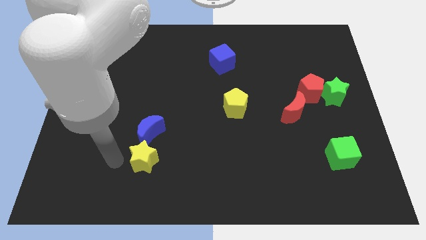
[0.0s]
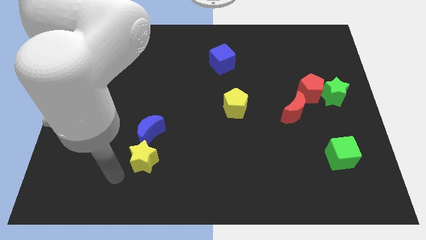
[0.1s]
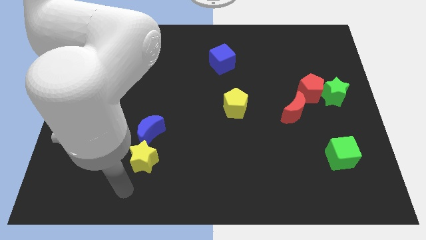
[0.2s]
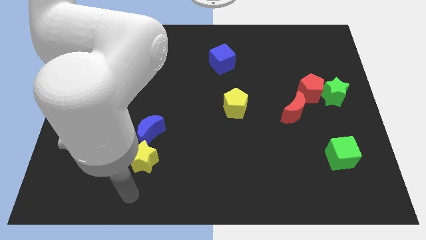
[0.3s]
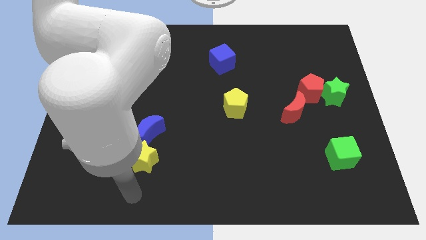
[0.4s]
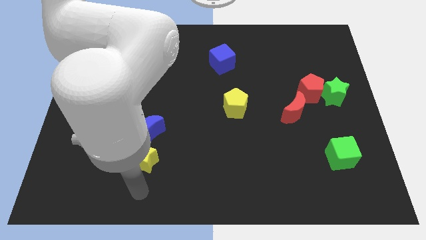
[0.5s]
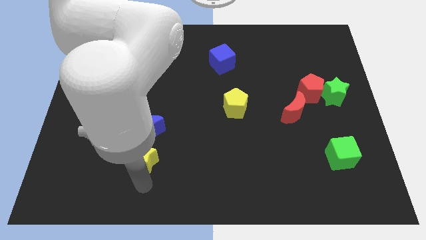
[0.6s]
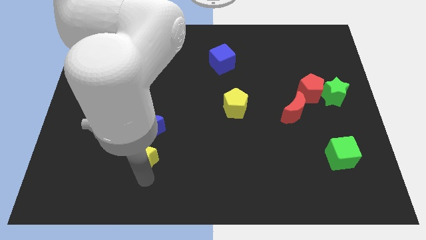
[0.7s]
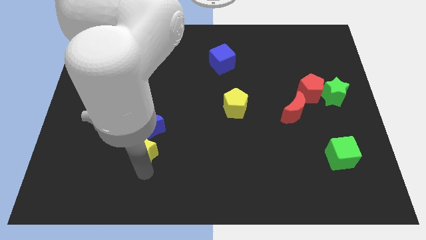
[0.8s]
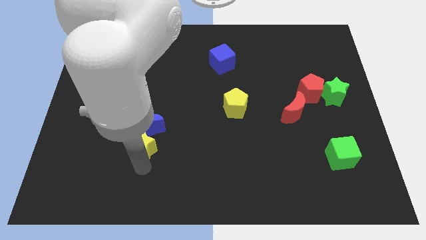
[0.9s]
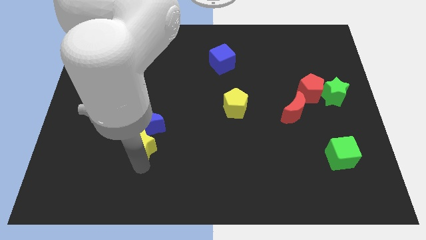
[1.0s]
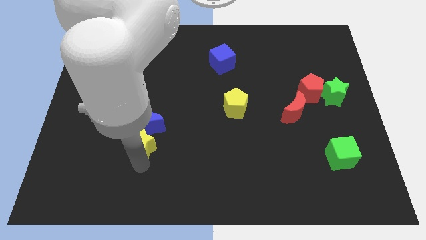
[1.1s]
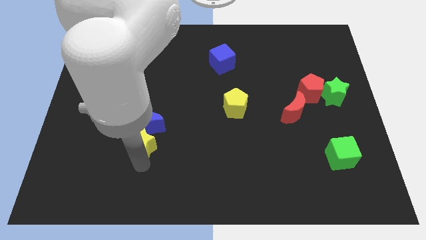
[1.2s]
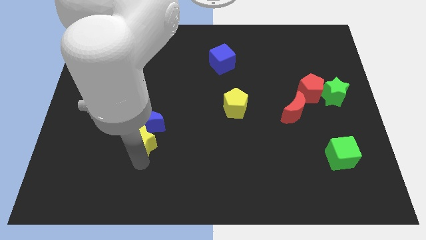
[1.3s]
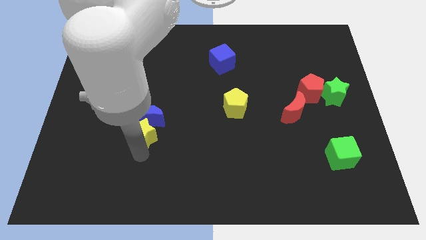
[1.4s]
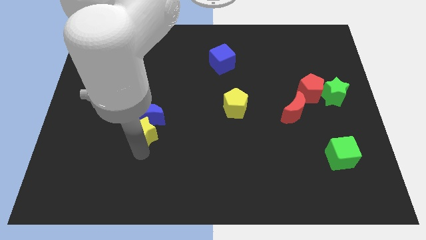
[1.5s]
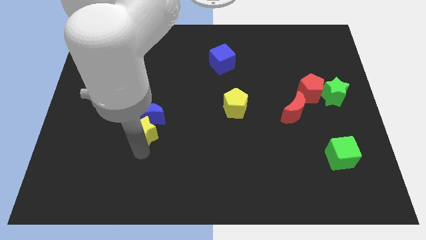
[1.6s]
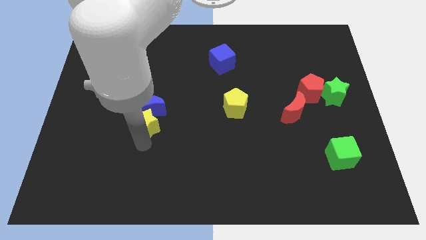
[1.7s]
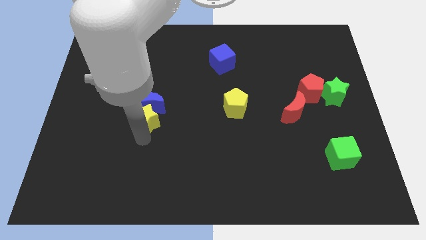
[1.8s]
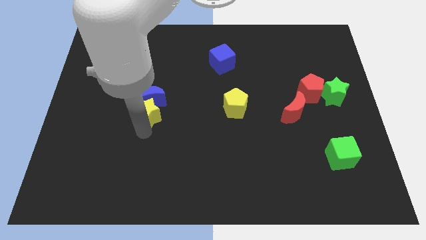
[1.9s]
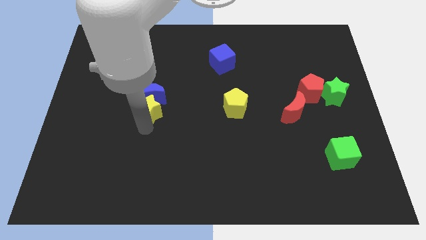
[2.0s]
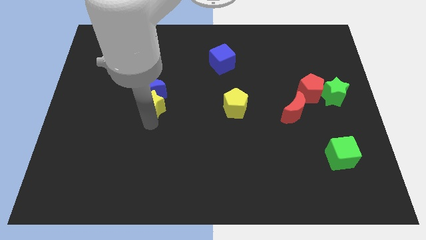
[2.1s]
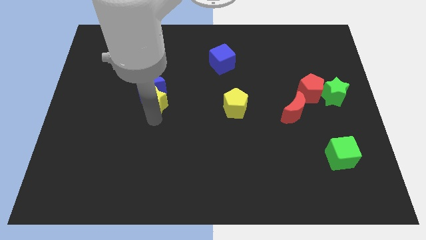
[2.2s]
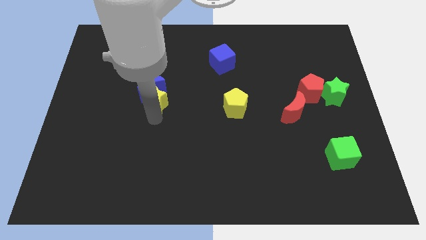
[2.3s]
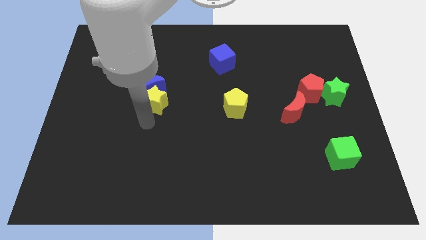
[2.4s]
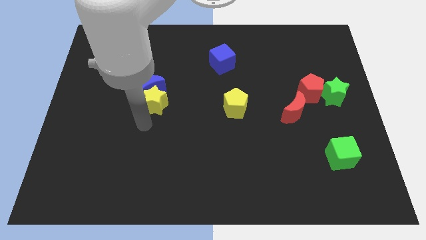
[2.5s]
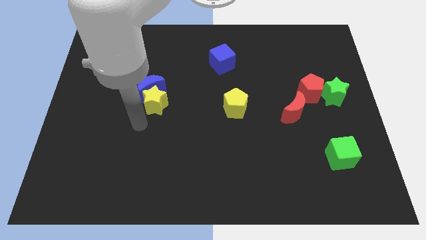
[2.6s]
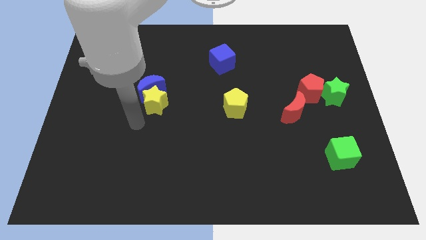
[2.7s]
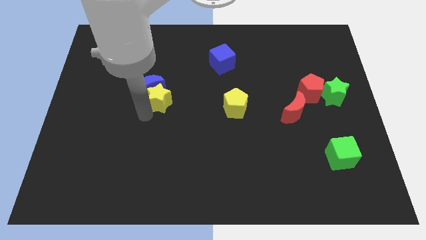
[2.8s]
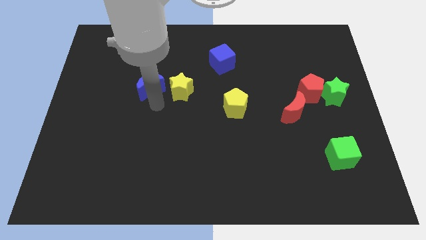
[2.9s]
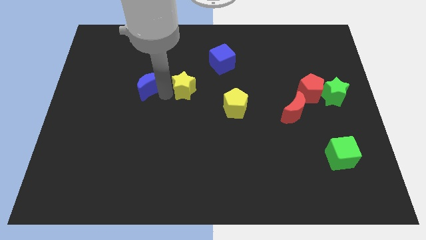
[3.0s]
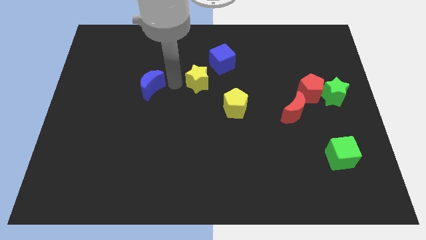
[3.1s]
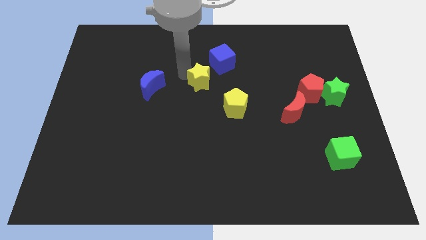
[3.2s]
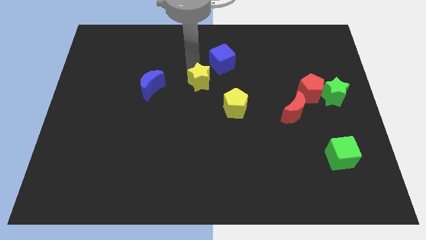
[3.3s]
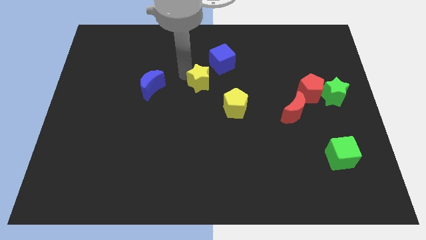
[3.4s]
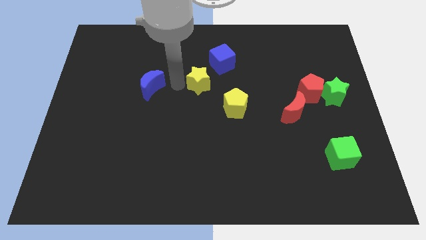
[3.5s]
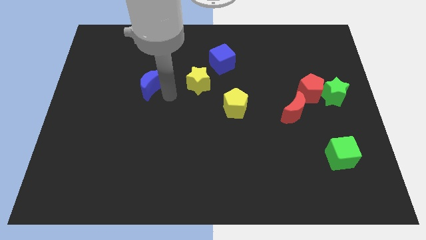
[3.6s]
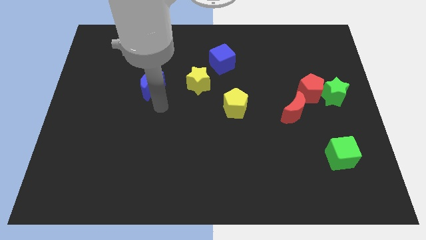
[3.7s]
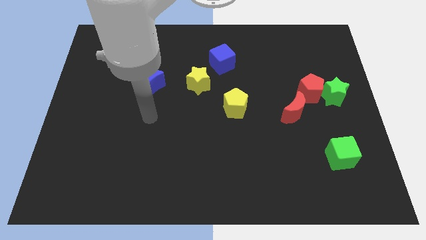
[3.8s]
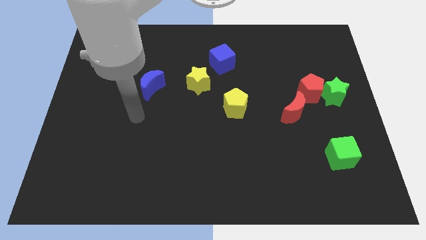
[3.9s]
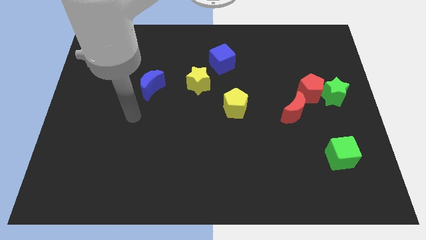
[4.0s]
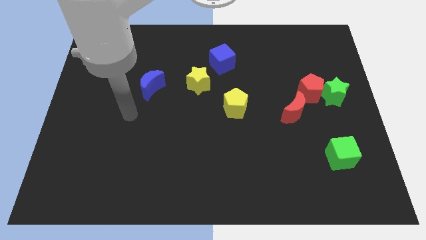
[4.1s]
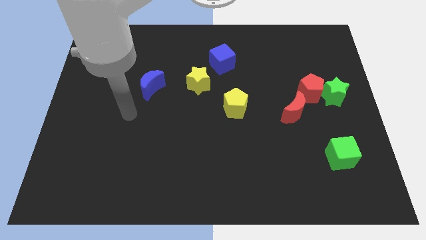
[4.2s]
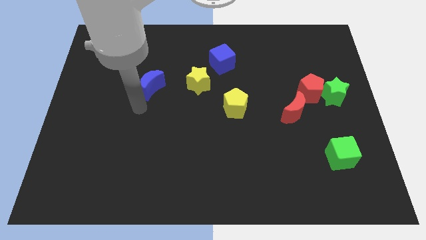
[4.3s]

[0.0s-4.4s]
push the yellow star along with blue crescent to the bottom left of the blue cube

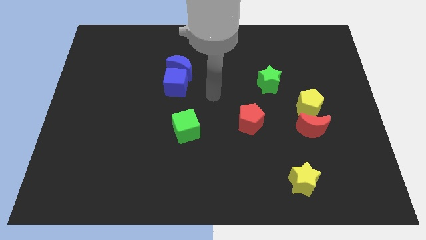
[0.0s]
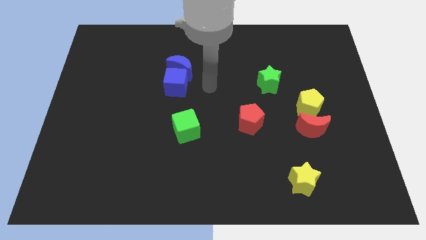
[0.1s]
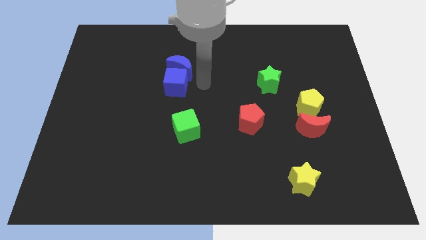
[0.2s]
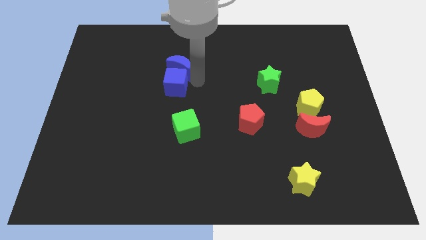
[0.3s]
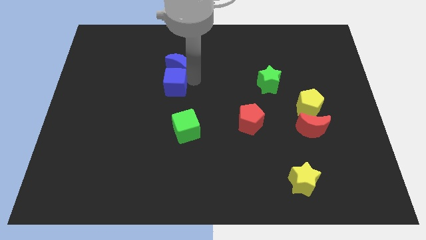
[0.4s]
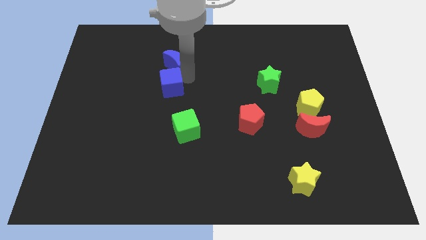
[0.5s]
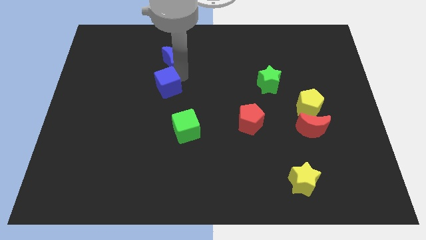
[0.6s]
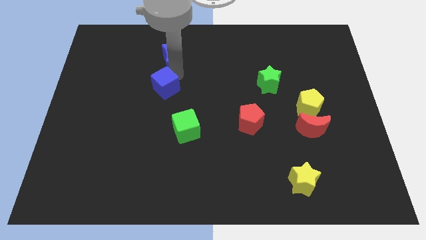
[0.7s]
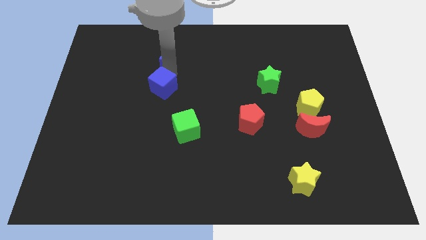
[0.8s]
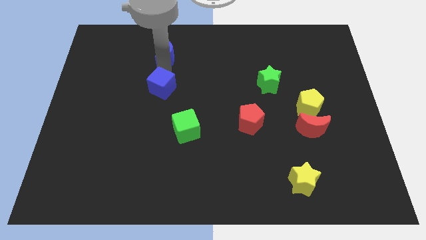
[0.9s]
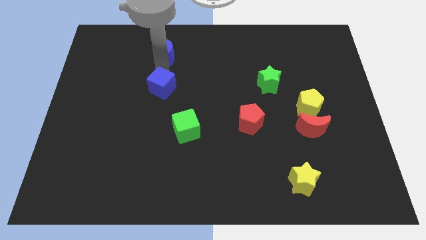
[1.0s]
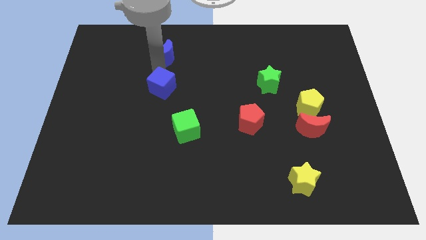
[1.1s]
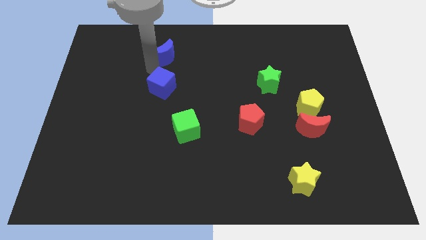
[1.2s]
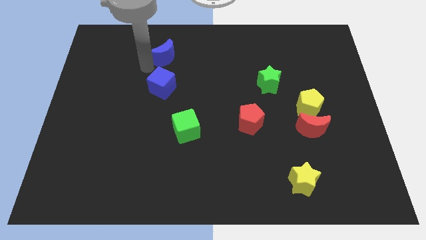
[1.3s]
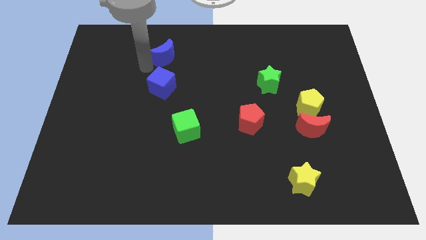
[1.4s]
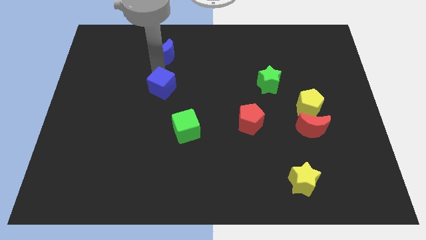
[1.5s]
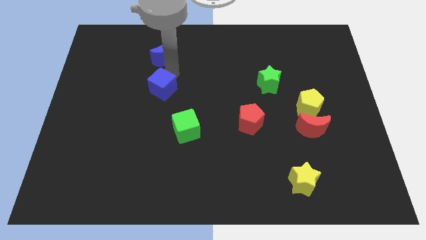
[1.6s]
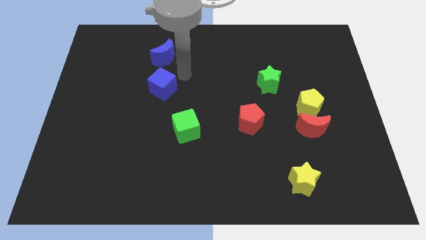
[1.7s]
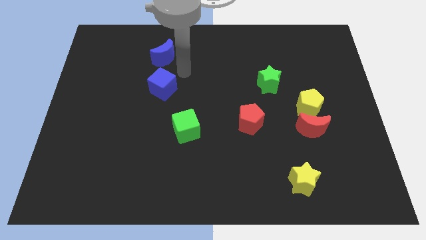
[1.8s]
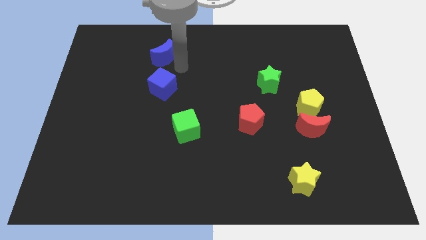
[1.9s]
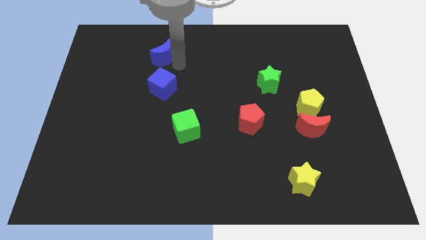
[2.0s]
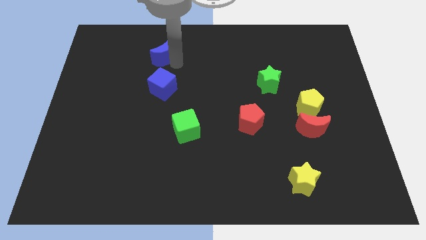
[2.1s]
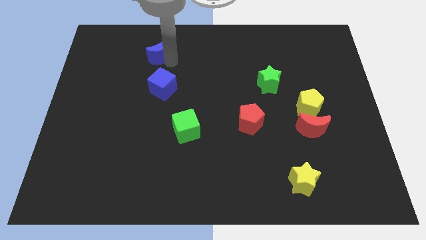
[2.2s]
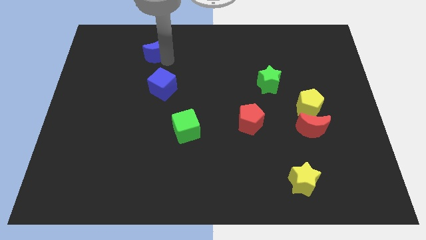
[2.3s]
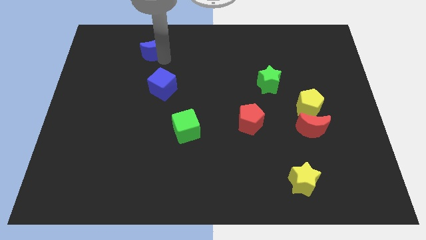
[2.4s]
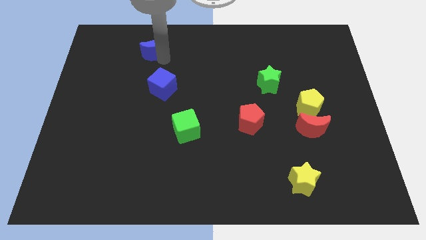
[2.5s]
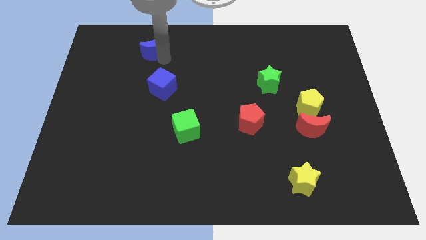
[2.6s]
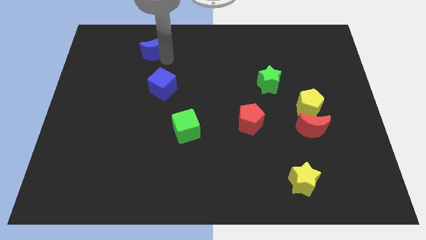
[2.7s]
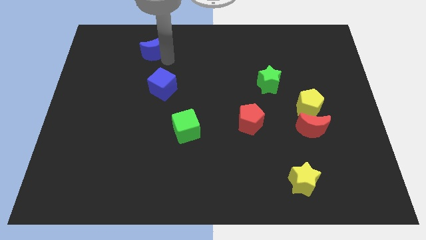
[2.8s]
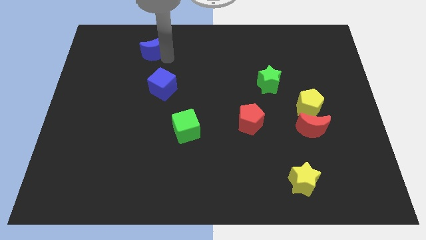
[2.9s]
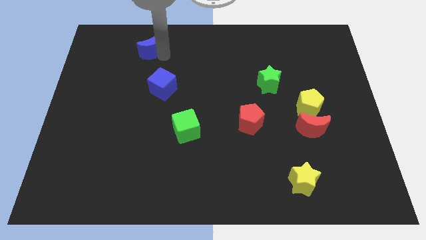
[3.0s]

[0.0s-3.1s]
separate blue blocks from each other

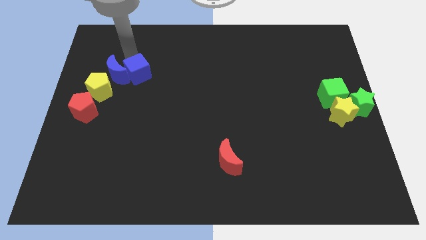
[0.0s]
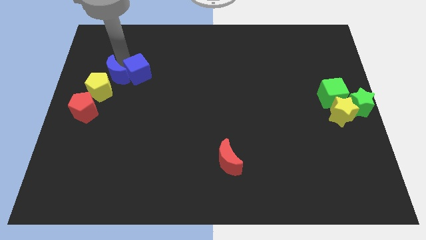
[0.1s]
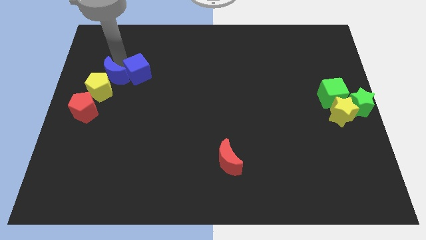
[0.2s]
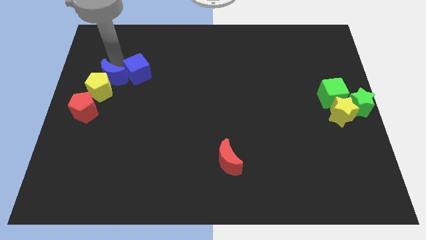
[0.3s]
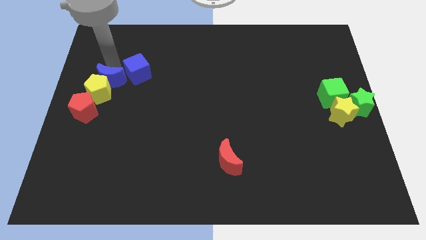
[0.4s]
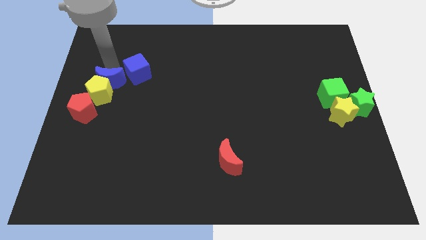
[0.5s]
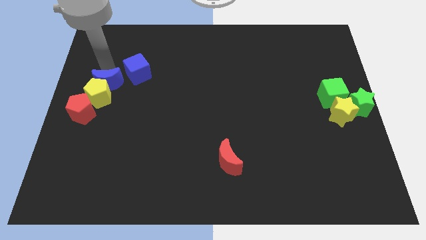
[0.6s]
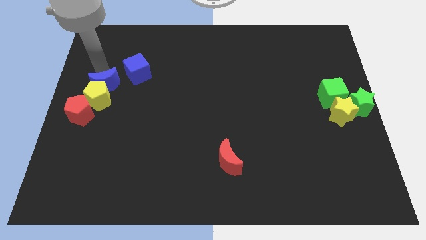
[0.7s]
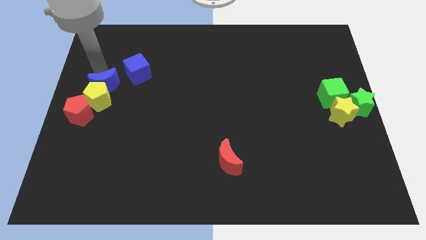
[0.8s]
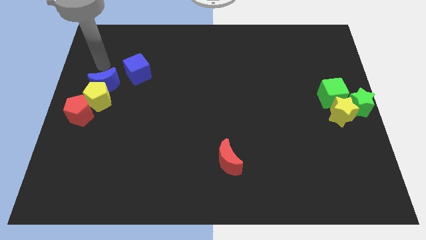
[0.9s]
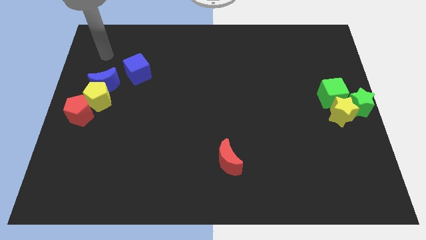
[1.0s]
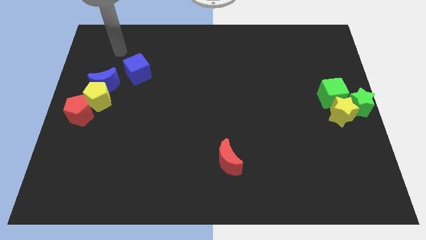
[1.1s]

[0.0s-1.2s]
push the blue crescent into the yellow pentagon from the top

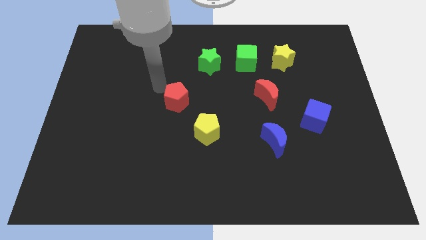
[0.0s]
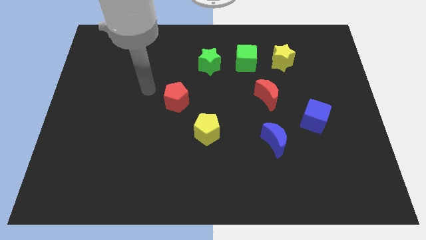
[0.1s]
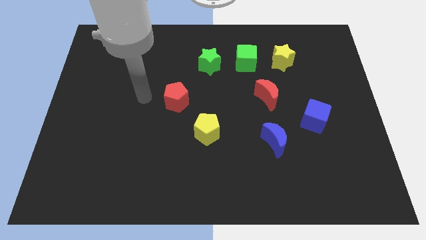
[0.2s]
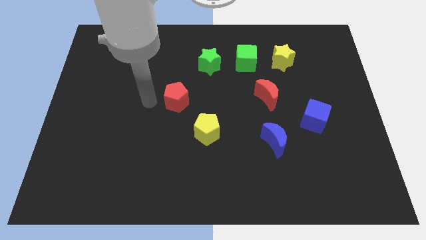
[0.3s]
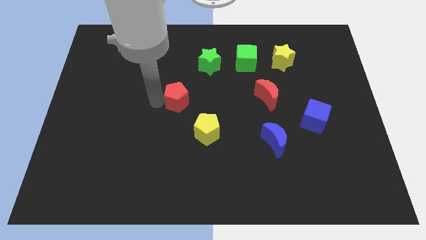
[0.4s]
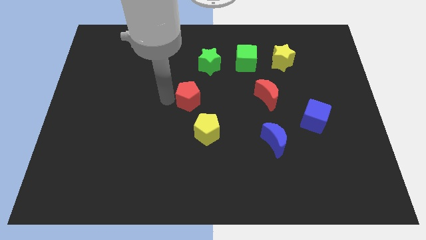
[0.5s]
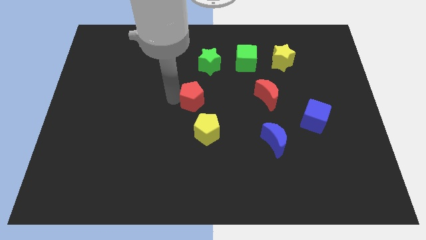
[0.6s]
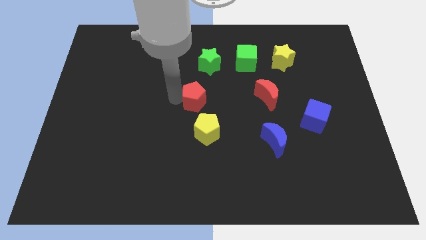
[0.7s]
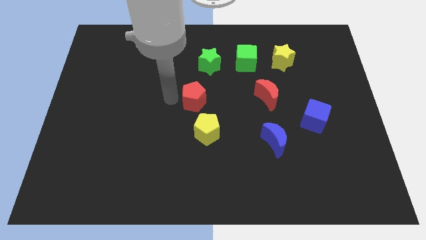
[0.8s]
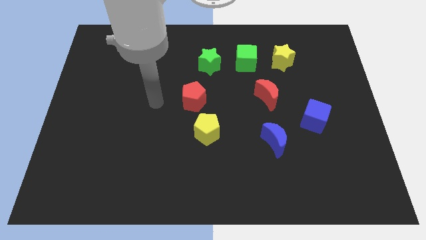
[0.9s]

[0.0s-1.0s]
place the arm to the left of the red pentagon
